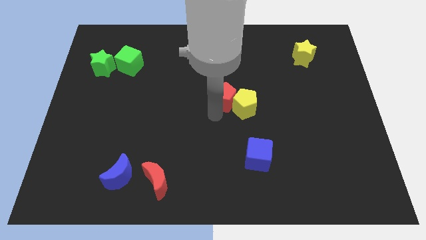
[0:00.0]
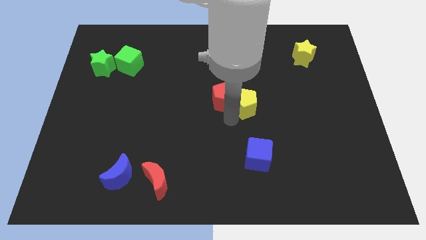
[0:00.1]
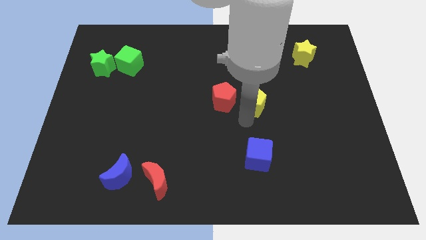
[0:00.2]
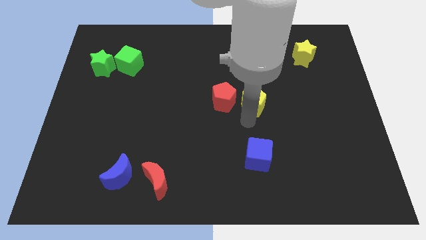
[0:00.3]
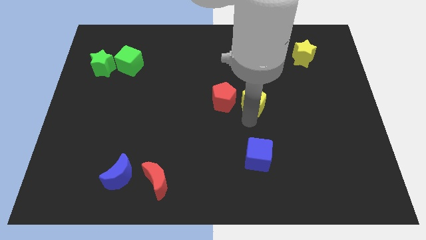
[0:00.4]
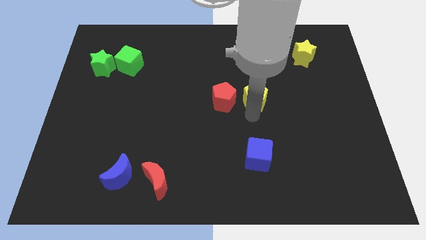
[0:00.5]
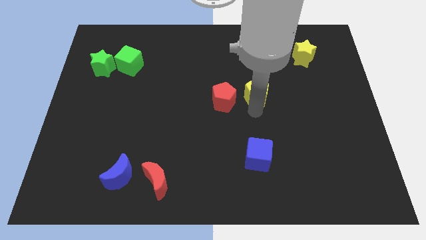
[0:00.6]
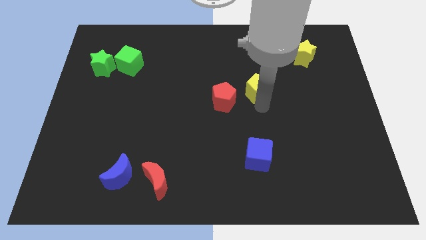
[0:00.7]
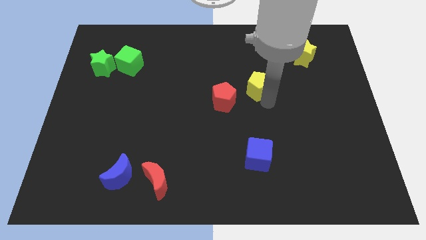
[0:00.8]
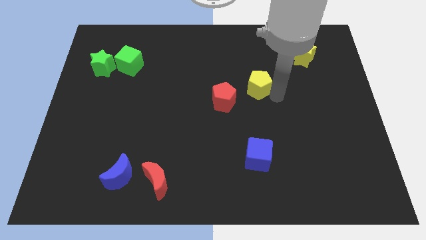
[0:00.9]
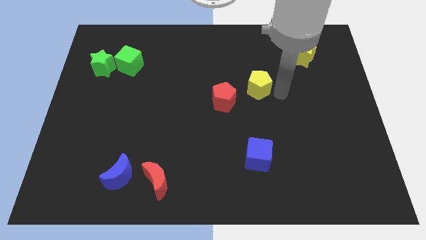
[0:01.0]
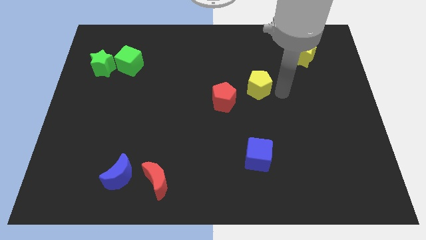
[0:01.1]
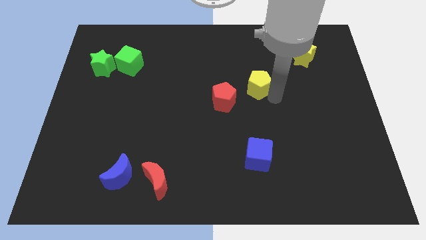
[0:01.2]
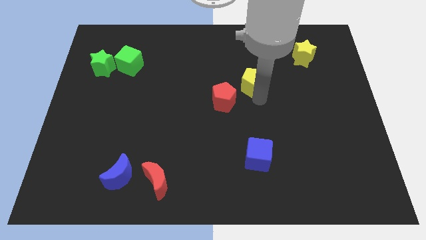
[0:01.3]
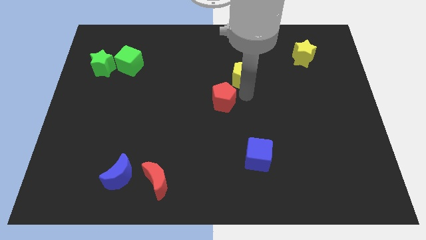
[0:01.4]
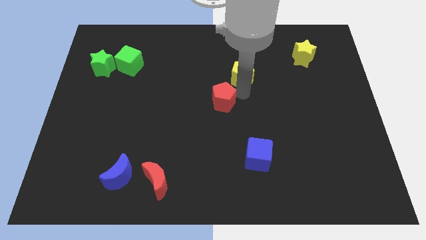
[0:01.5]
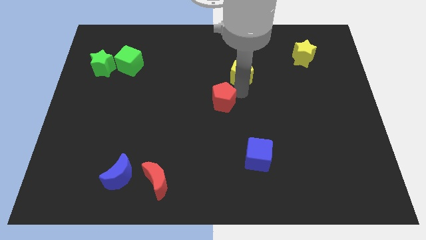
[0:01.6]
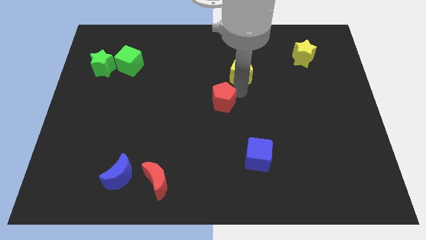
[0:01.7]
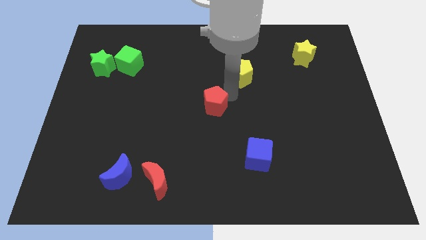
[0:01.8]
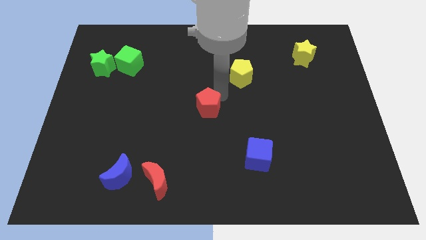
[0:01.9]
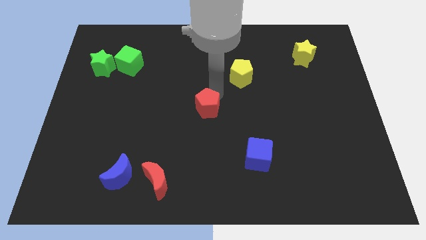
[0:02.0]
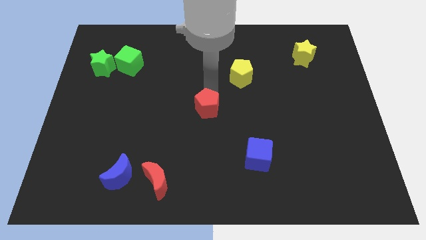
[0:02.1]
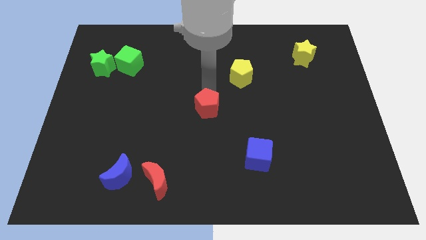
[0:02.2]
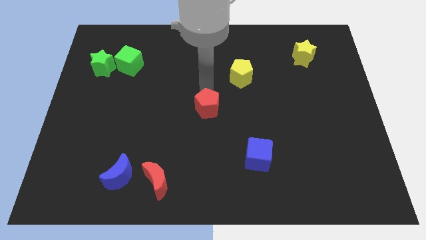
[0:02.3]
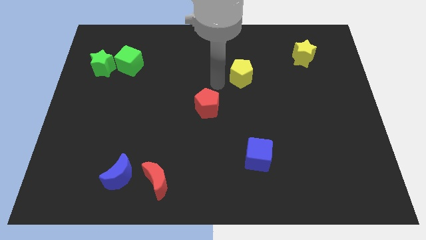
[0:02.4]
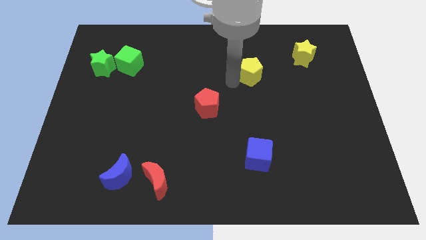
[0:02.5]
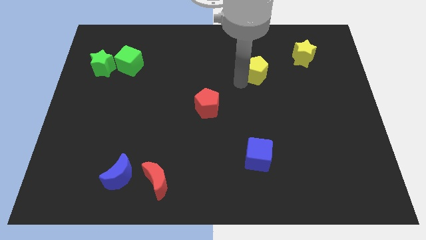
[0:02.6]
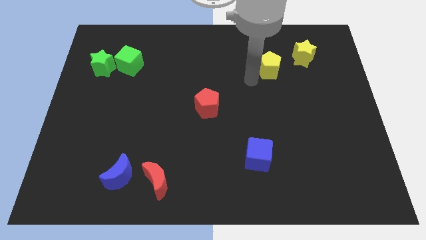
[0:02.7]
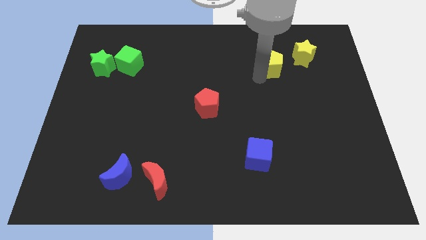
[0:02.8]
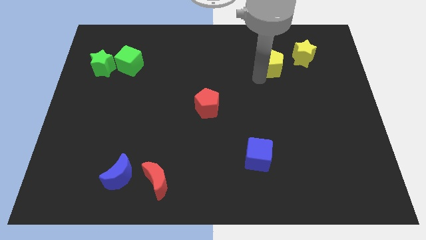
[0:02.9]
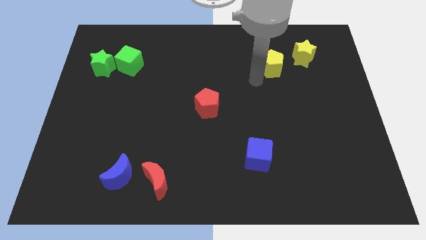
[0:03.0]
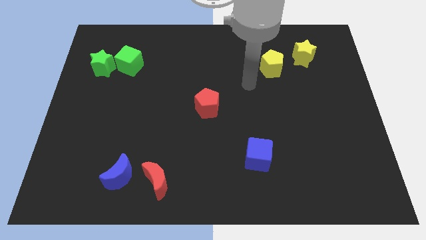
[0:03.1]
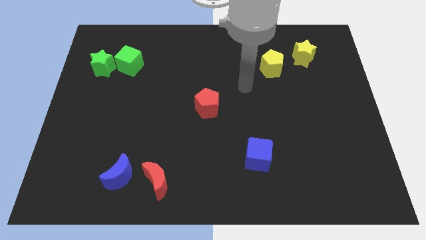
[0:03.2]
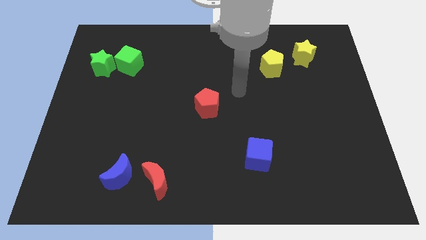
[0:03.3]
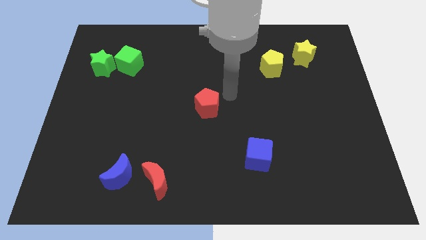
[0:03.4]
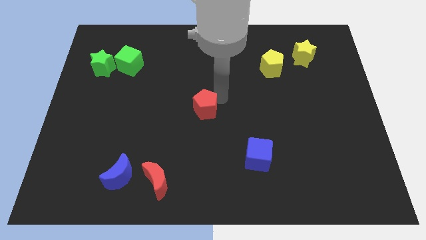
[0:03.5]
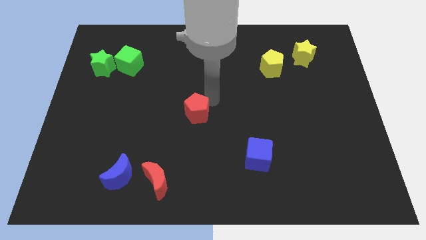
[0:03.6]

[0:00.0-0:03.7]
separate the yellow pentagon from red pentagon towards top

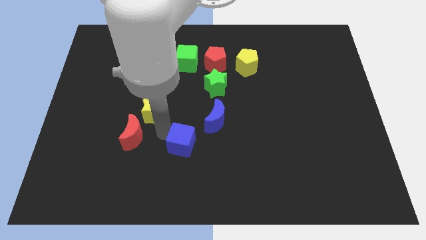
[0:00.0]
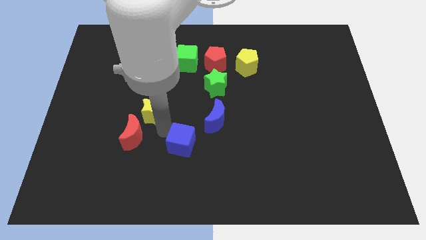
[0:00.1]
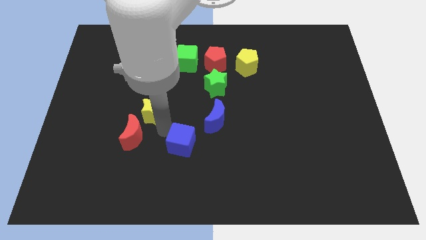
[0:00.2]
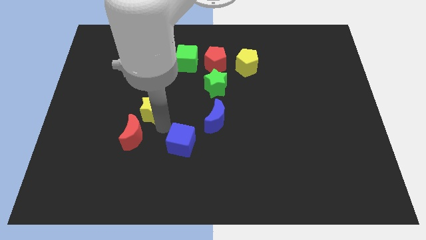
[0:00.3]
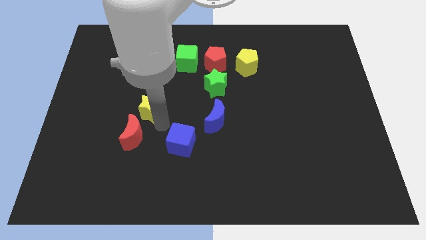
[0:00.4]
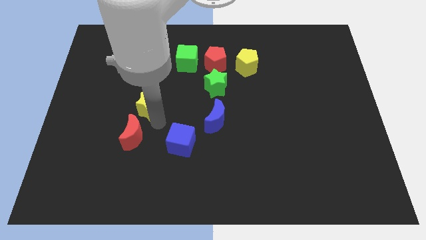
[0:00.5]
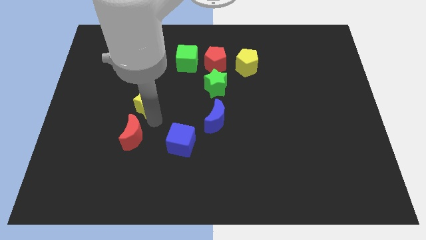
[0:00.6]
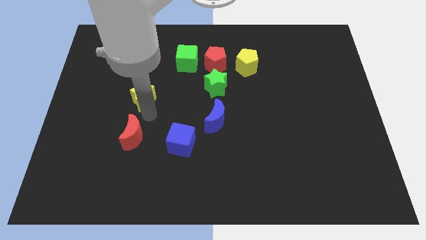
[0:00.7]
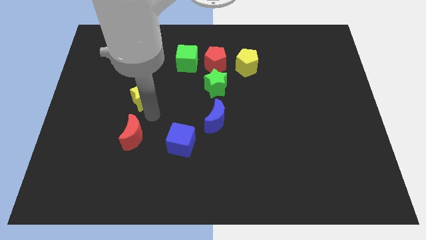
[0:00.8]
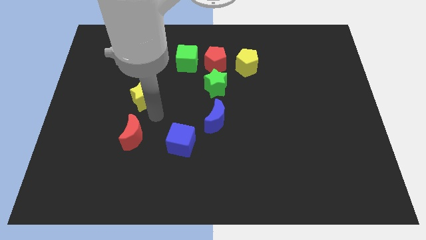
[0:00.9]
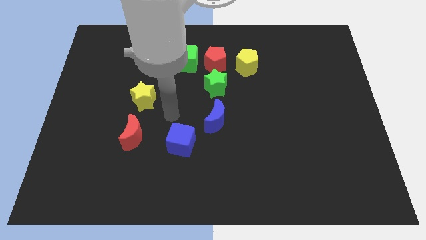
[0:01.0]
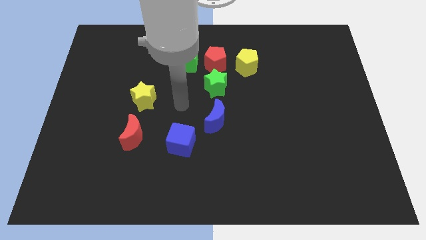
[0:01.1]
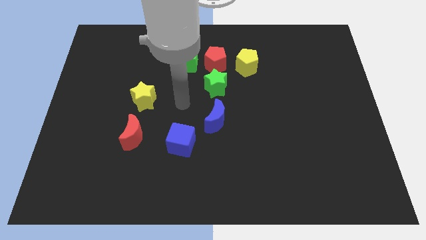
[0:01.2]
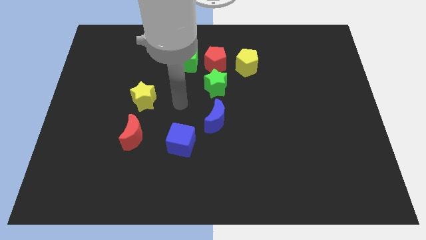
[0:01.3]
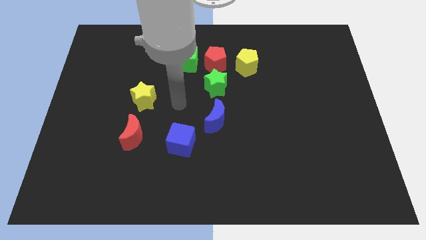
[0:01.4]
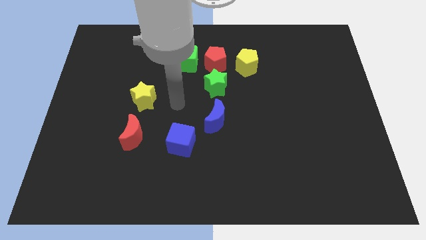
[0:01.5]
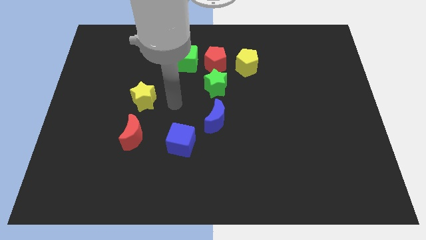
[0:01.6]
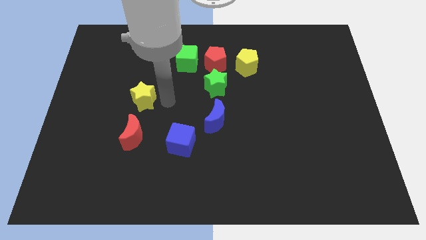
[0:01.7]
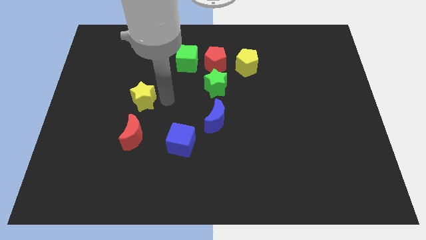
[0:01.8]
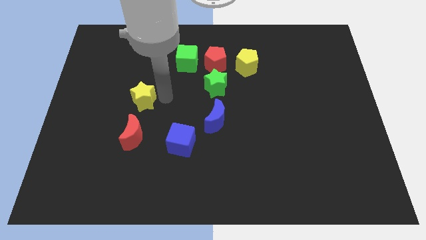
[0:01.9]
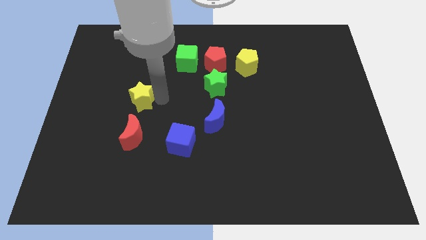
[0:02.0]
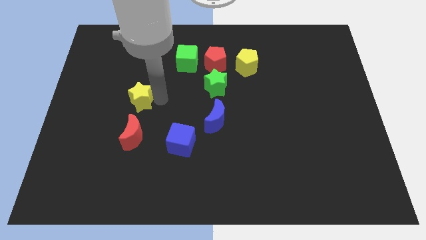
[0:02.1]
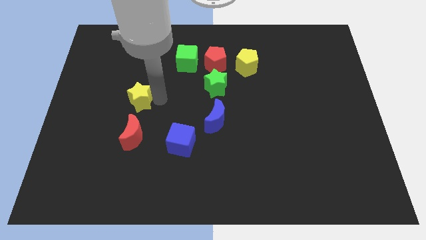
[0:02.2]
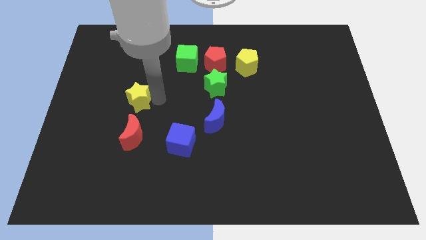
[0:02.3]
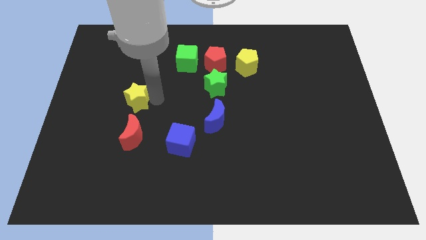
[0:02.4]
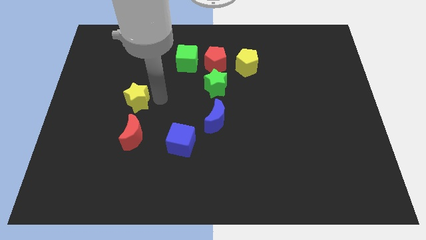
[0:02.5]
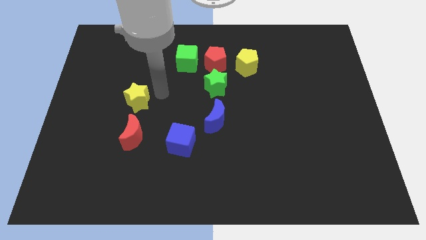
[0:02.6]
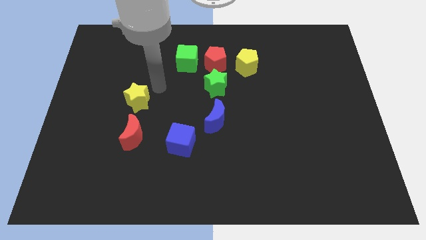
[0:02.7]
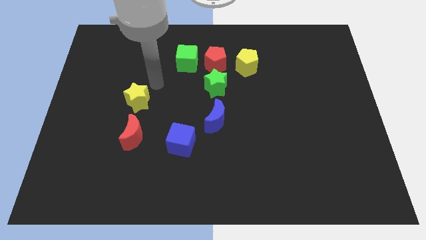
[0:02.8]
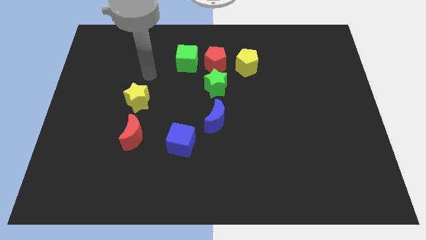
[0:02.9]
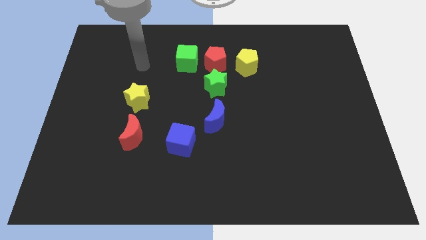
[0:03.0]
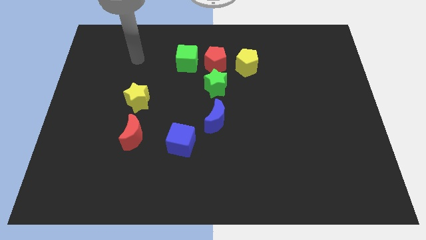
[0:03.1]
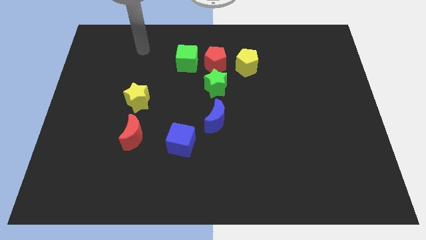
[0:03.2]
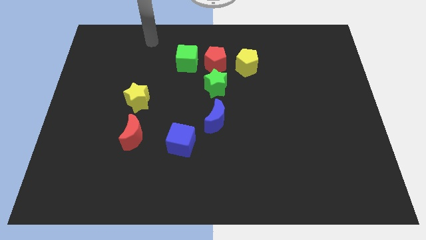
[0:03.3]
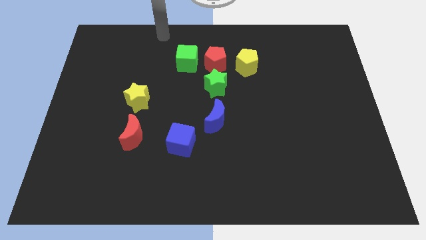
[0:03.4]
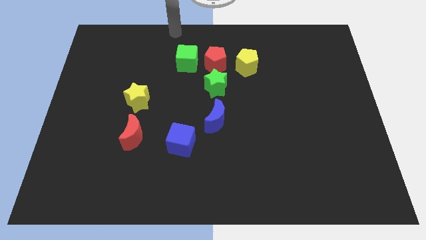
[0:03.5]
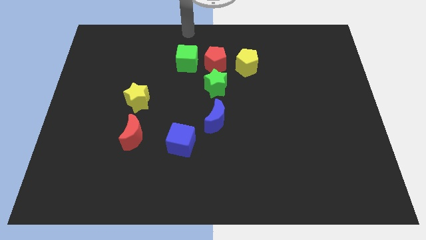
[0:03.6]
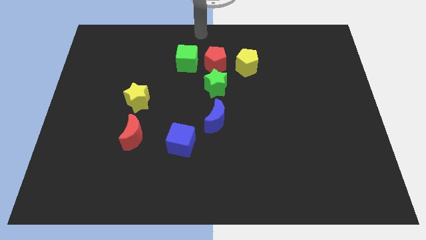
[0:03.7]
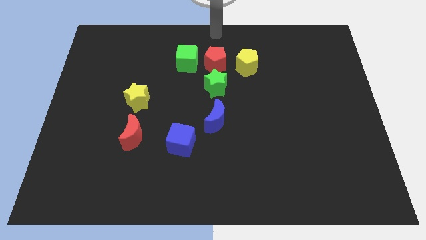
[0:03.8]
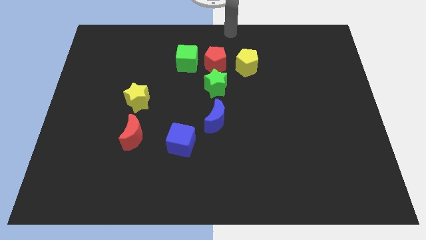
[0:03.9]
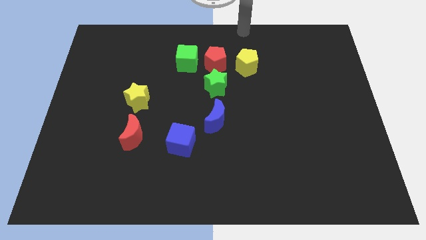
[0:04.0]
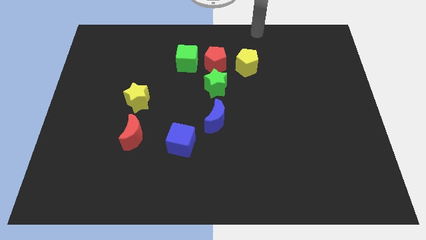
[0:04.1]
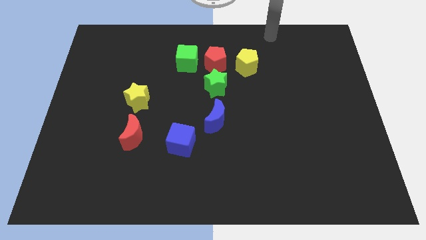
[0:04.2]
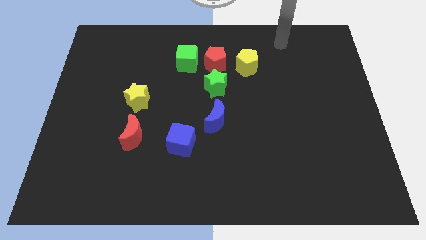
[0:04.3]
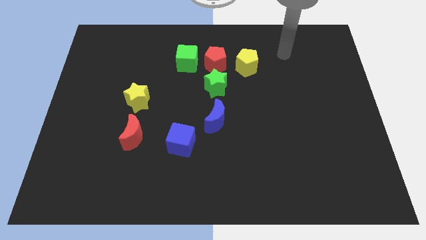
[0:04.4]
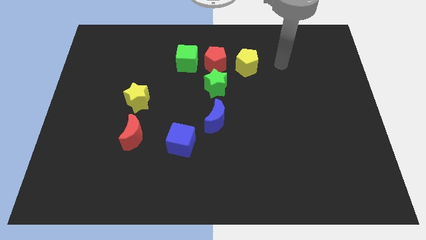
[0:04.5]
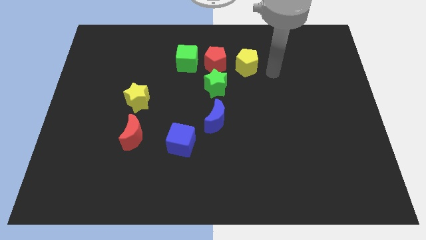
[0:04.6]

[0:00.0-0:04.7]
move the yellow star to the top of the red crescent

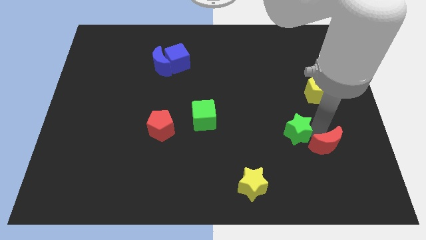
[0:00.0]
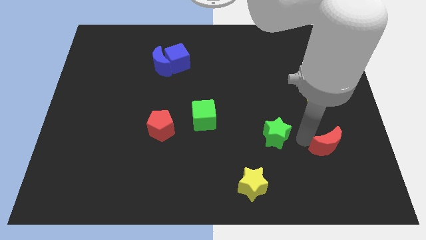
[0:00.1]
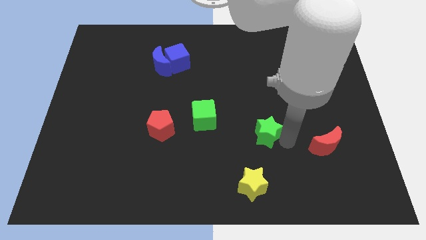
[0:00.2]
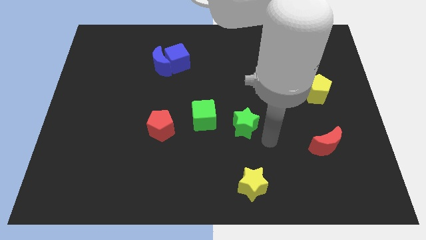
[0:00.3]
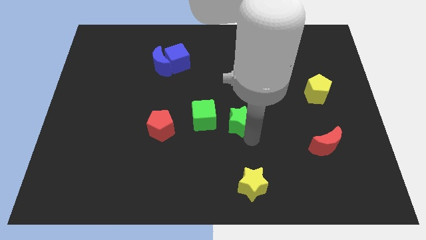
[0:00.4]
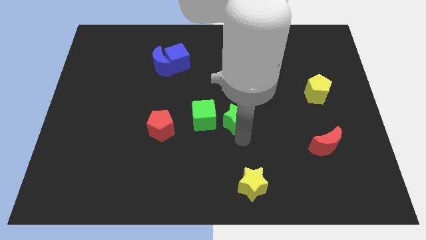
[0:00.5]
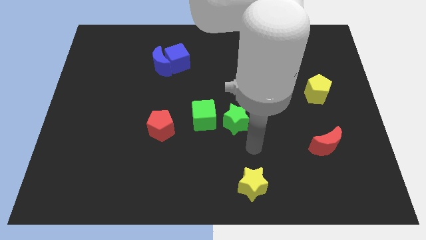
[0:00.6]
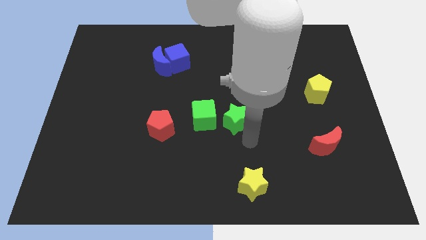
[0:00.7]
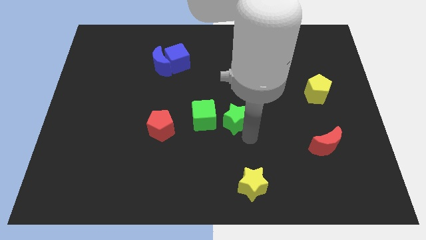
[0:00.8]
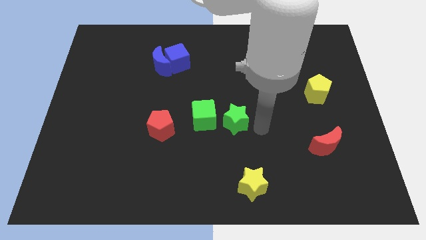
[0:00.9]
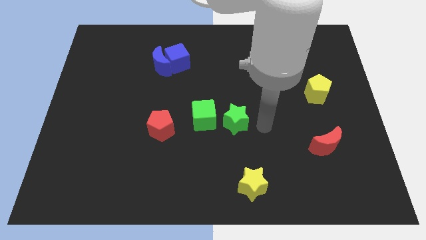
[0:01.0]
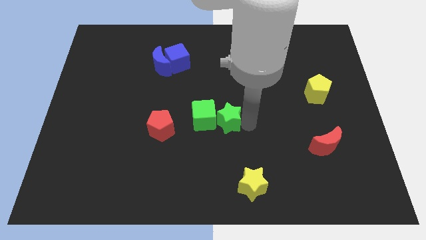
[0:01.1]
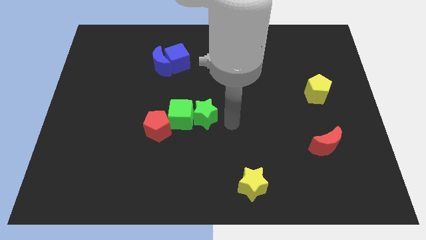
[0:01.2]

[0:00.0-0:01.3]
place the green star at the right side of the green cube
